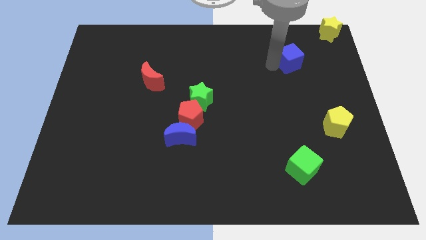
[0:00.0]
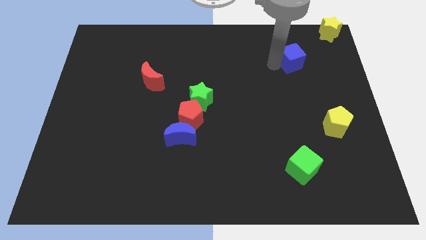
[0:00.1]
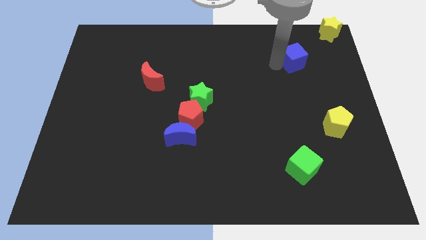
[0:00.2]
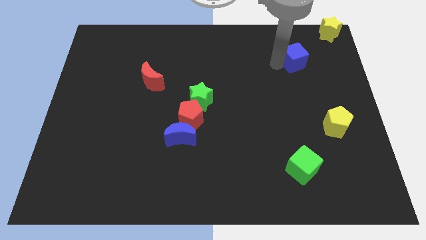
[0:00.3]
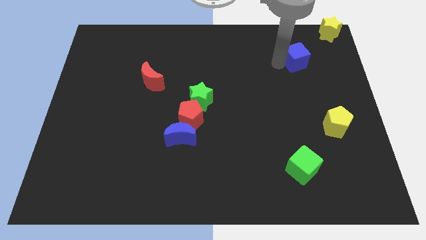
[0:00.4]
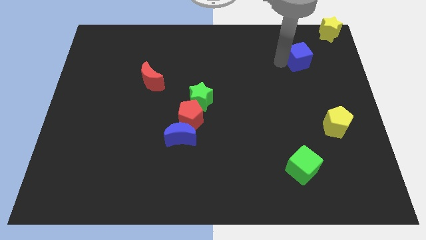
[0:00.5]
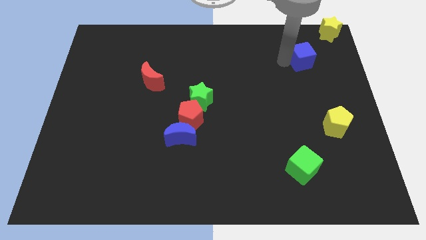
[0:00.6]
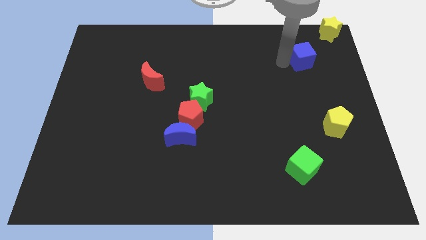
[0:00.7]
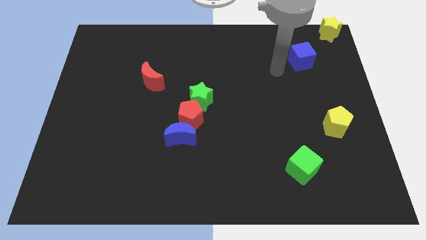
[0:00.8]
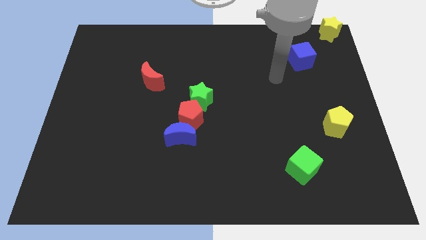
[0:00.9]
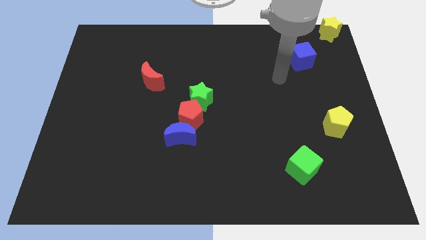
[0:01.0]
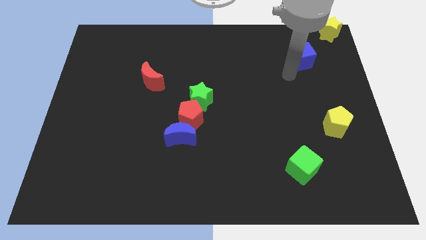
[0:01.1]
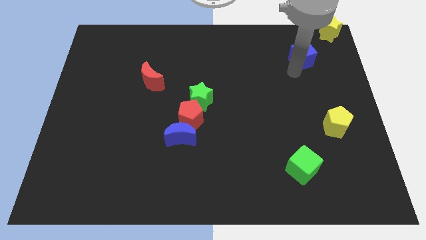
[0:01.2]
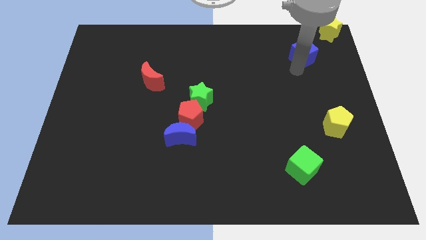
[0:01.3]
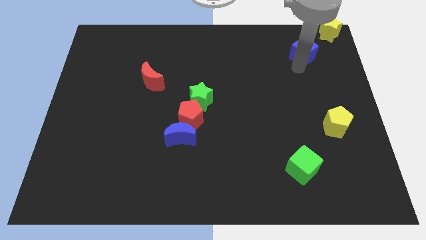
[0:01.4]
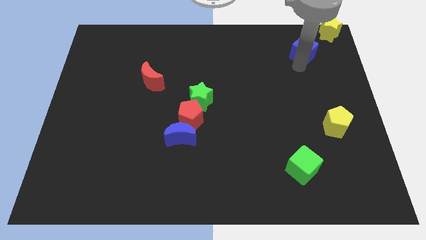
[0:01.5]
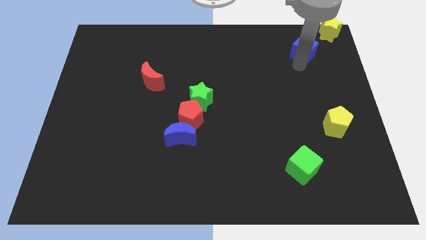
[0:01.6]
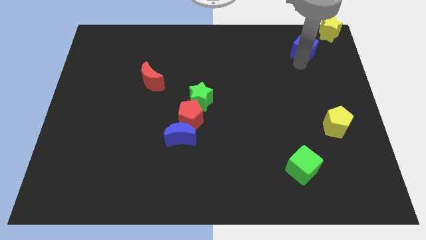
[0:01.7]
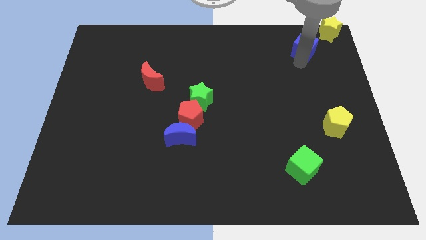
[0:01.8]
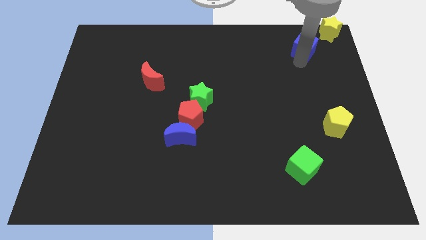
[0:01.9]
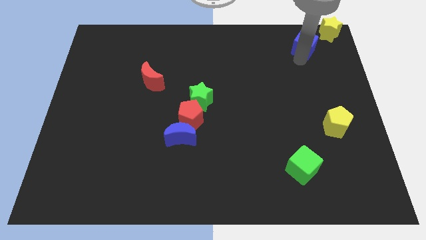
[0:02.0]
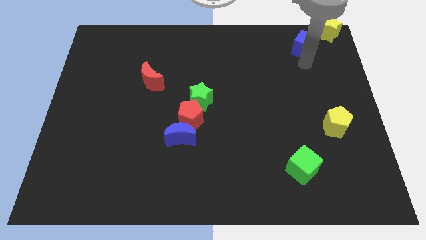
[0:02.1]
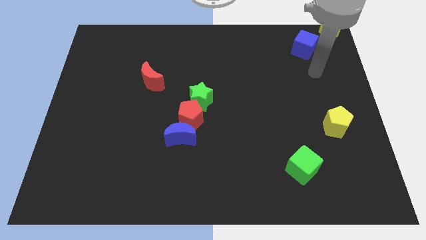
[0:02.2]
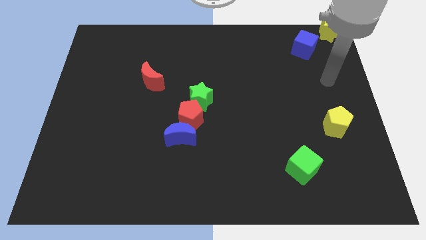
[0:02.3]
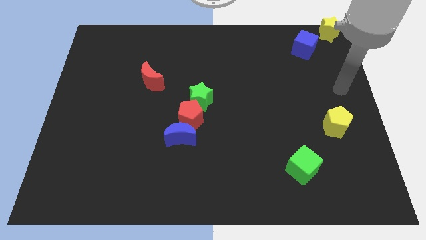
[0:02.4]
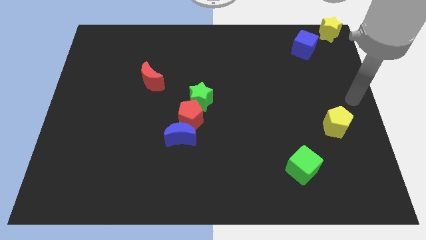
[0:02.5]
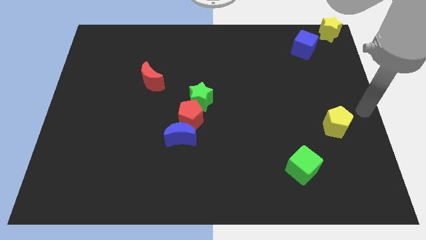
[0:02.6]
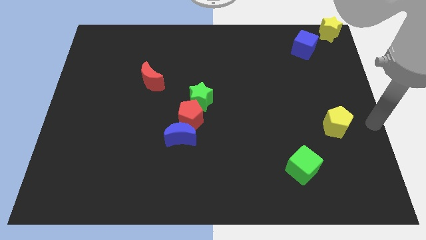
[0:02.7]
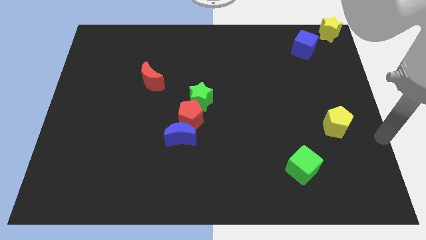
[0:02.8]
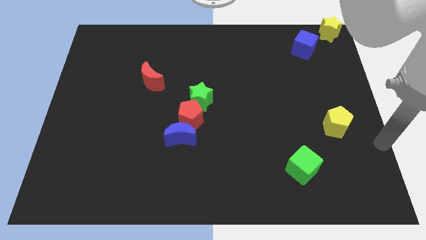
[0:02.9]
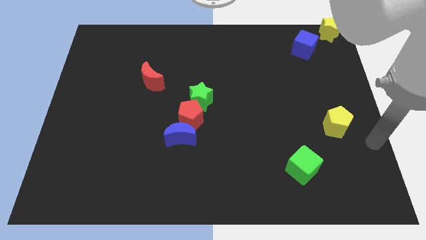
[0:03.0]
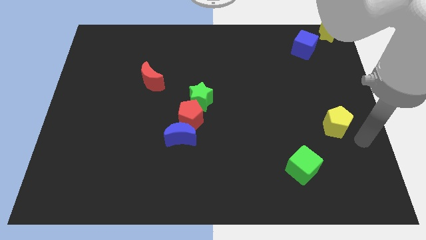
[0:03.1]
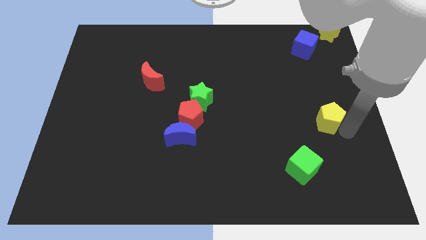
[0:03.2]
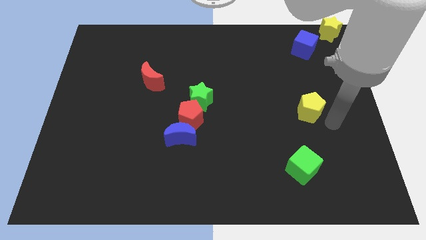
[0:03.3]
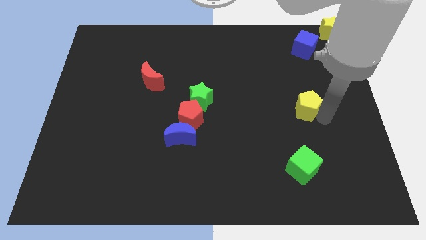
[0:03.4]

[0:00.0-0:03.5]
push yellow star below blue cube

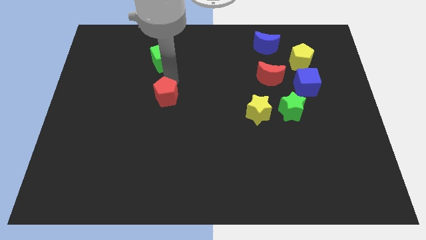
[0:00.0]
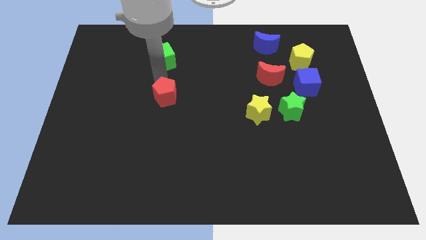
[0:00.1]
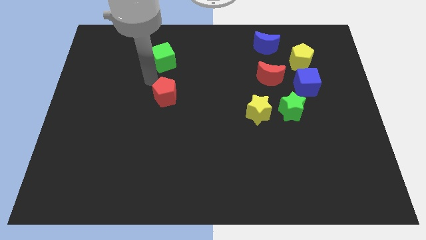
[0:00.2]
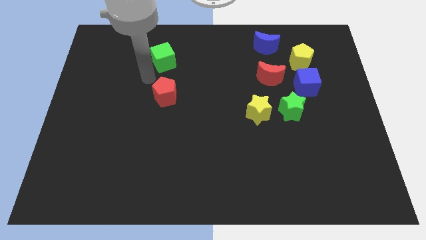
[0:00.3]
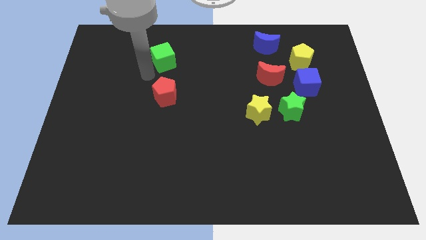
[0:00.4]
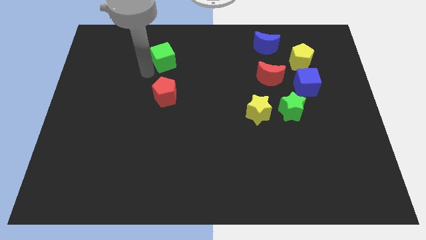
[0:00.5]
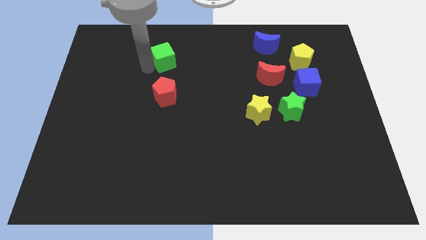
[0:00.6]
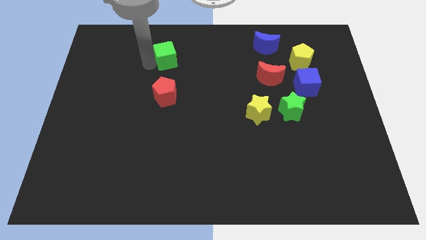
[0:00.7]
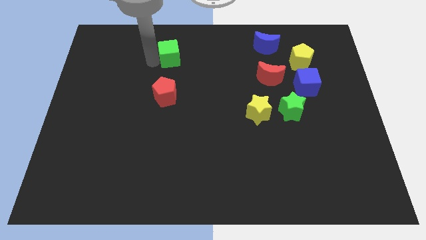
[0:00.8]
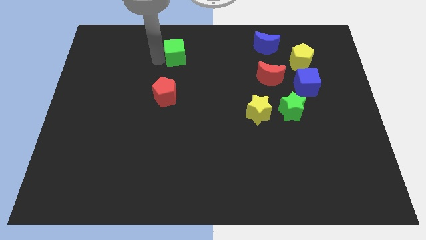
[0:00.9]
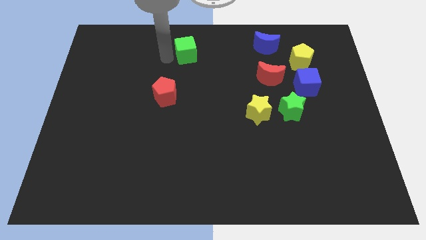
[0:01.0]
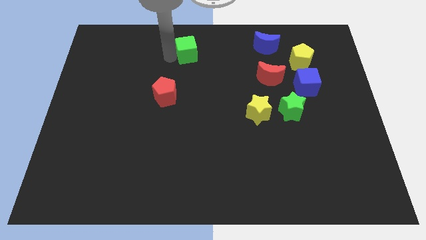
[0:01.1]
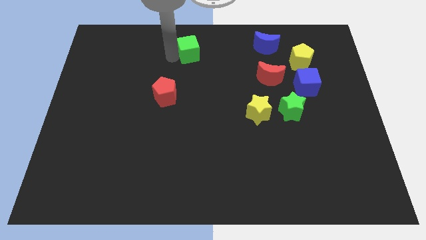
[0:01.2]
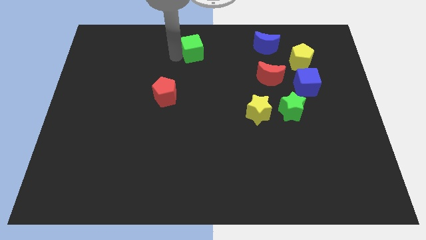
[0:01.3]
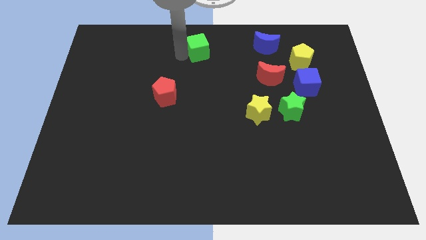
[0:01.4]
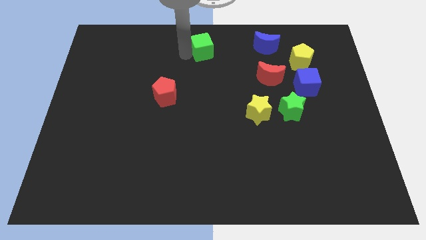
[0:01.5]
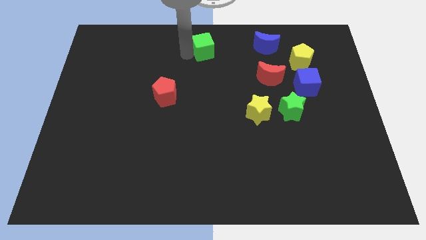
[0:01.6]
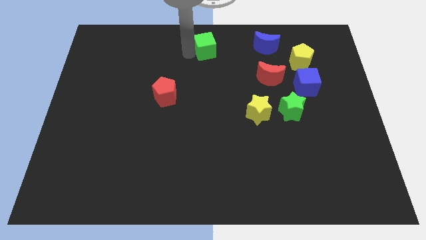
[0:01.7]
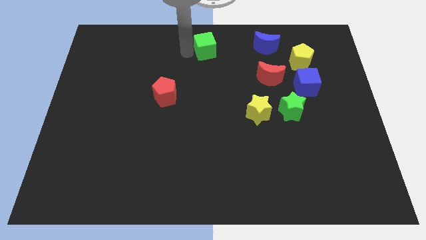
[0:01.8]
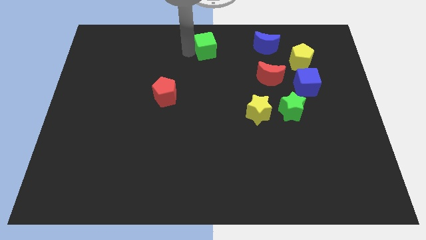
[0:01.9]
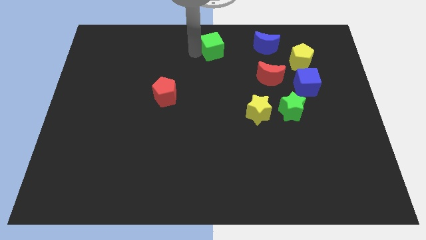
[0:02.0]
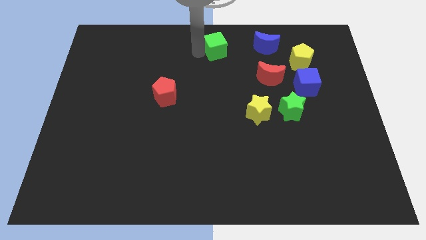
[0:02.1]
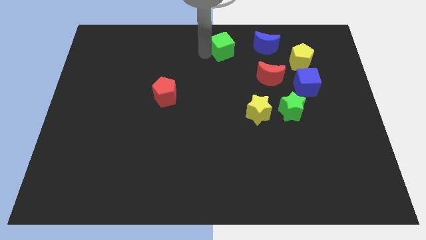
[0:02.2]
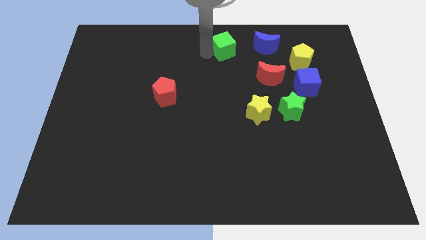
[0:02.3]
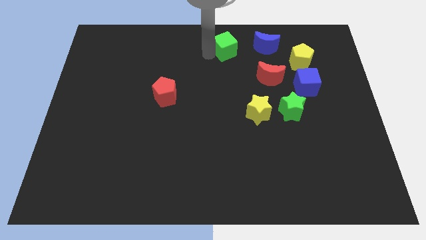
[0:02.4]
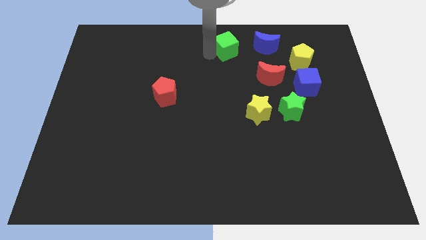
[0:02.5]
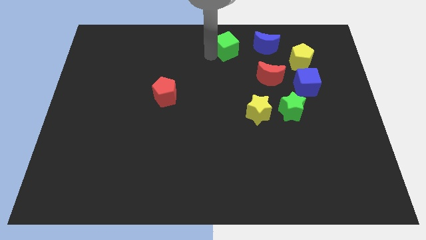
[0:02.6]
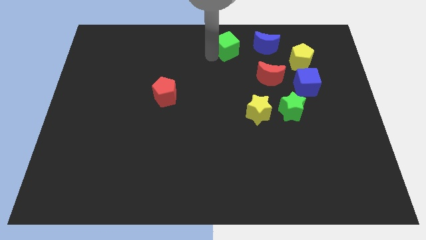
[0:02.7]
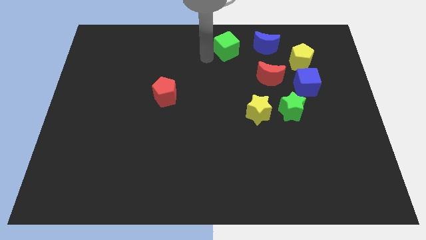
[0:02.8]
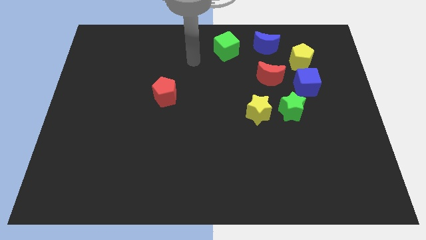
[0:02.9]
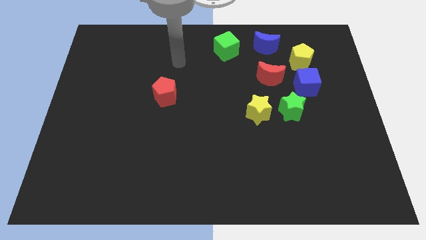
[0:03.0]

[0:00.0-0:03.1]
place the green cube to the left of the blue crescent

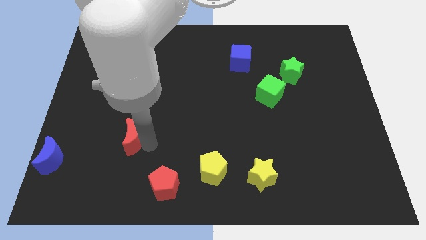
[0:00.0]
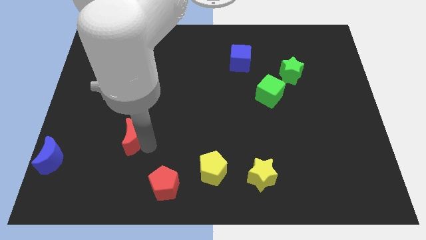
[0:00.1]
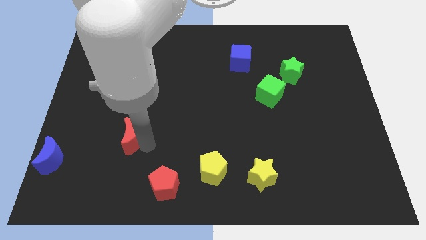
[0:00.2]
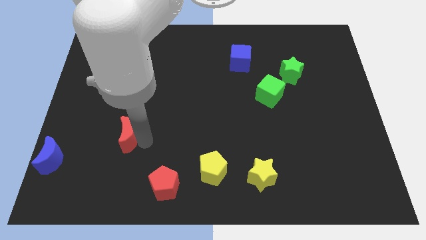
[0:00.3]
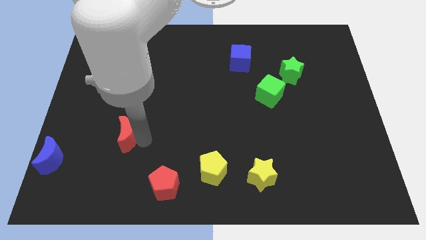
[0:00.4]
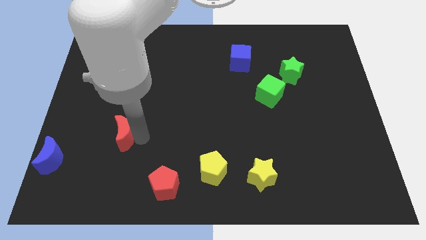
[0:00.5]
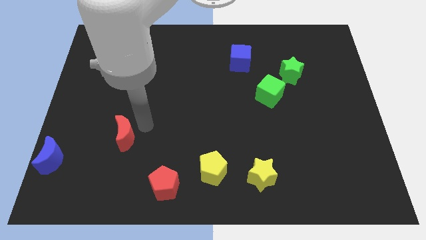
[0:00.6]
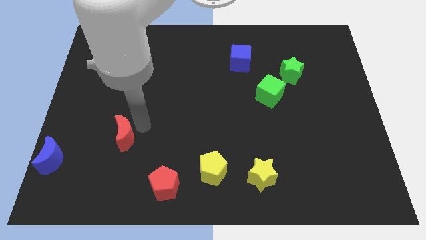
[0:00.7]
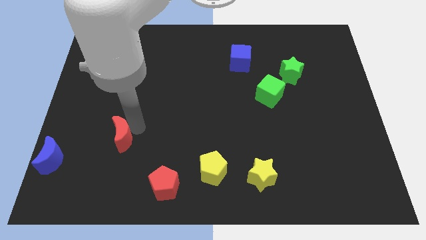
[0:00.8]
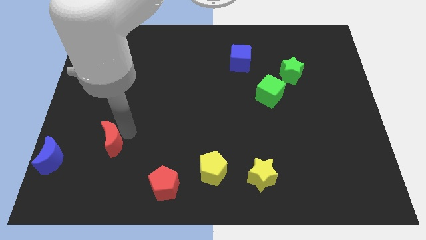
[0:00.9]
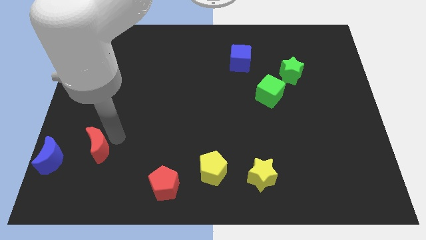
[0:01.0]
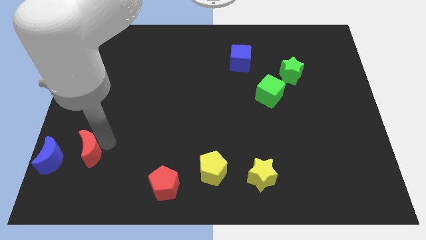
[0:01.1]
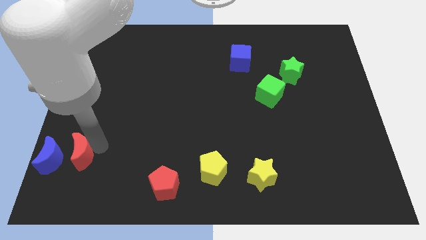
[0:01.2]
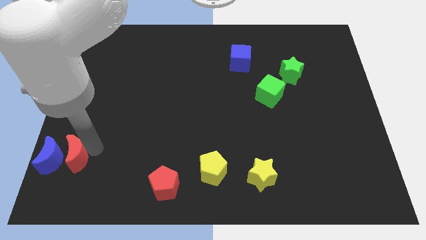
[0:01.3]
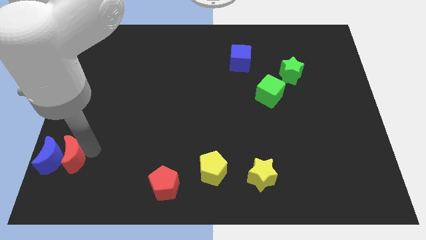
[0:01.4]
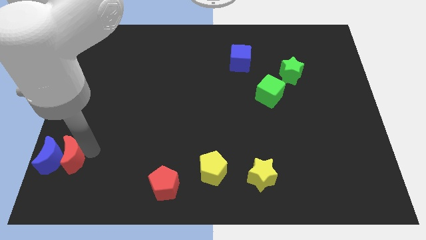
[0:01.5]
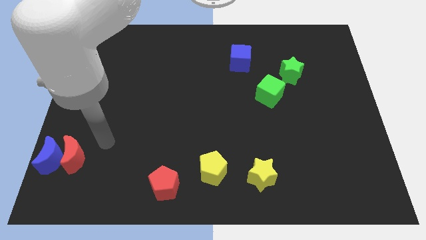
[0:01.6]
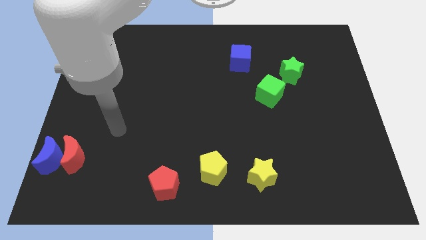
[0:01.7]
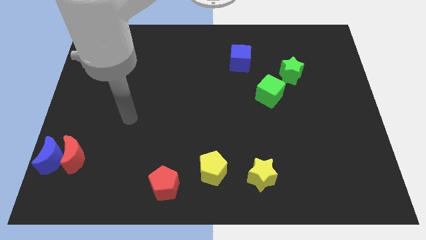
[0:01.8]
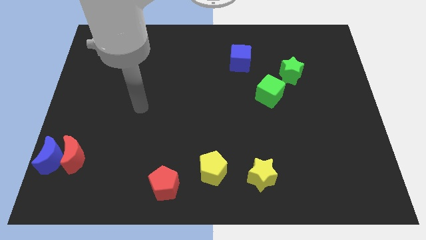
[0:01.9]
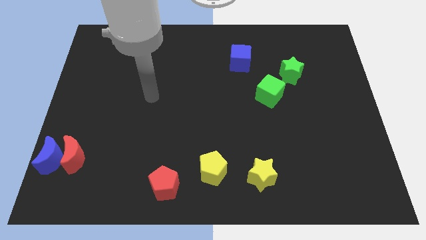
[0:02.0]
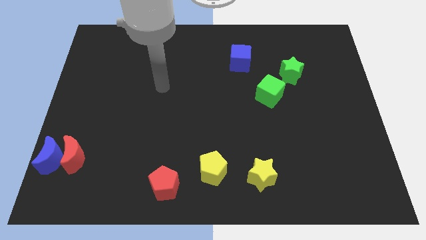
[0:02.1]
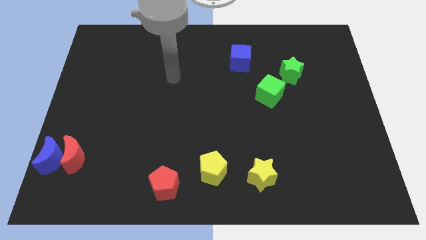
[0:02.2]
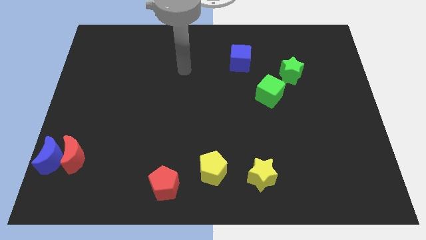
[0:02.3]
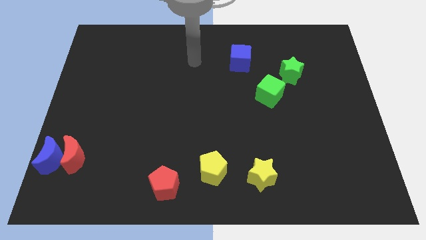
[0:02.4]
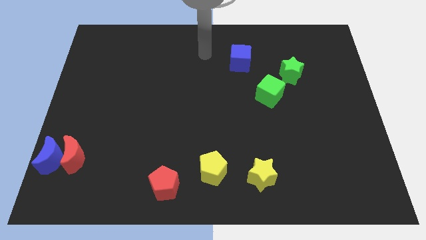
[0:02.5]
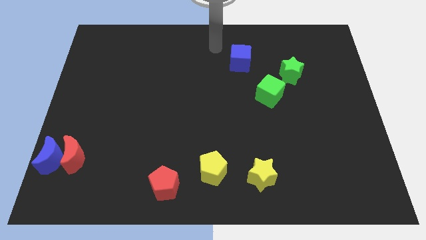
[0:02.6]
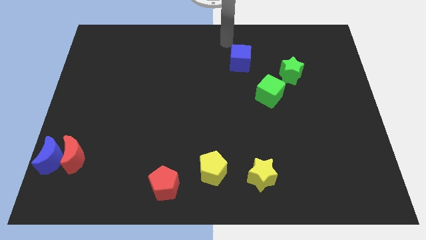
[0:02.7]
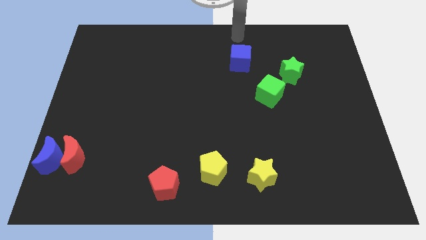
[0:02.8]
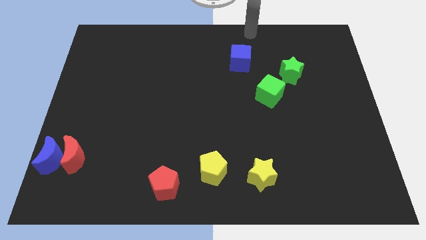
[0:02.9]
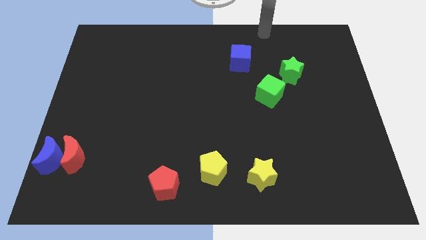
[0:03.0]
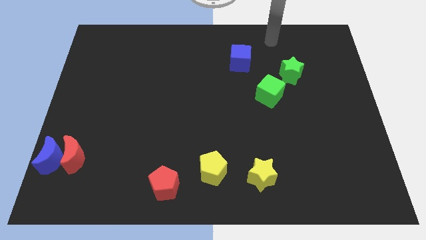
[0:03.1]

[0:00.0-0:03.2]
place the red moon parallel right to the blue moon
